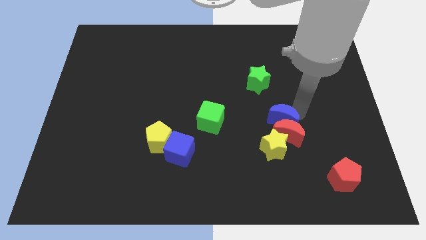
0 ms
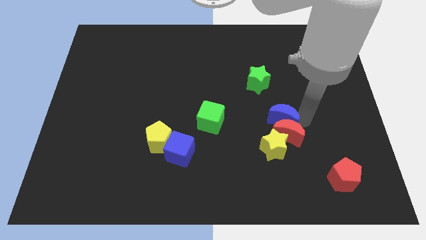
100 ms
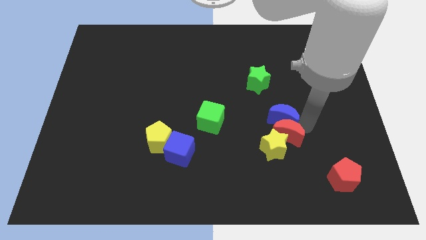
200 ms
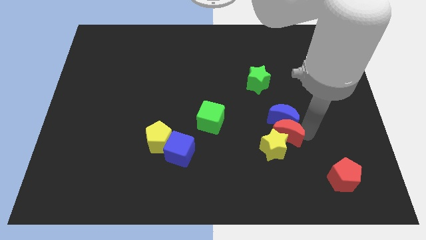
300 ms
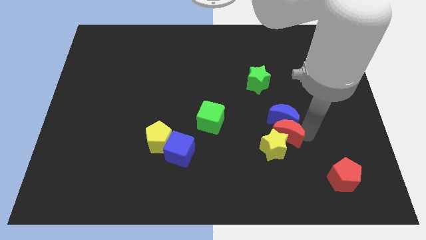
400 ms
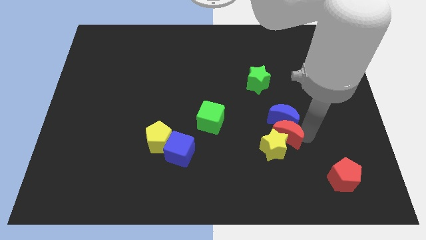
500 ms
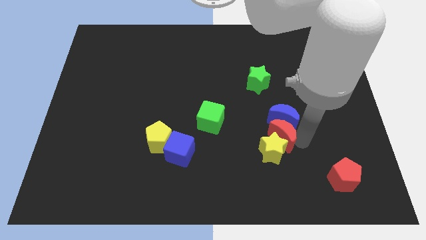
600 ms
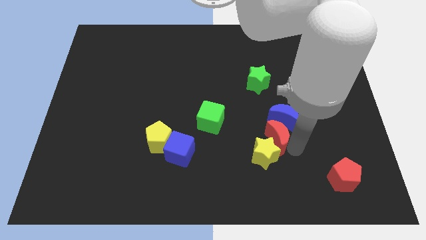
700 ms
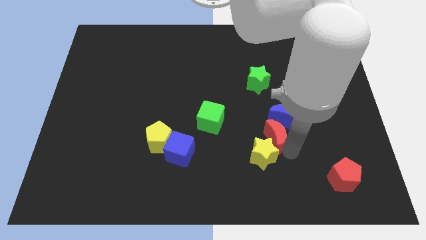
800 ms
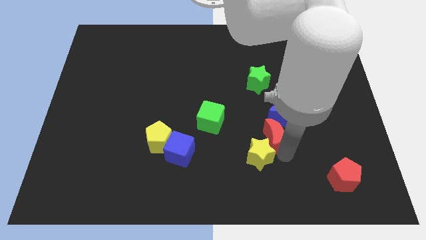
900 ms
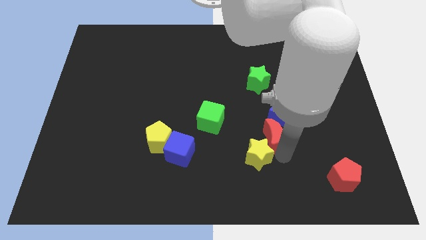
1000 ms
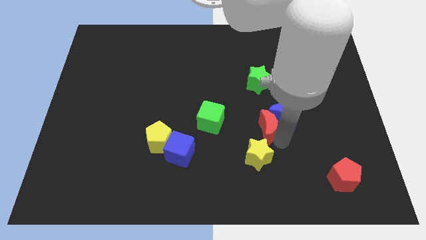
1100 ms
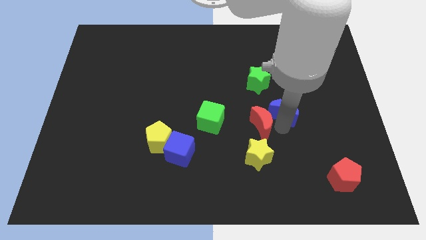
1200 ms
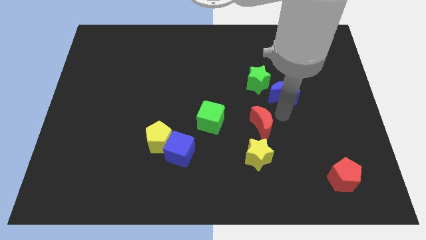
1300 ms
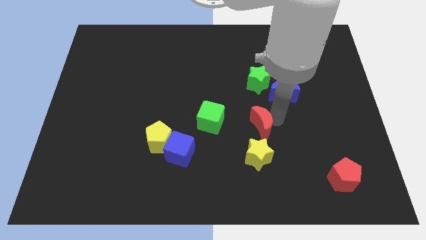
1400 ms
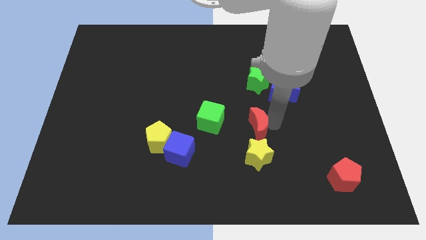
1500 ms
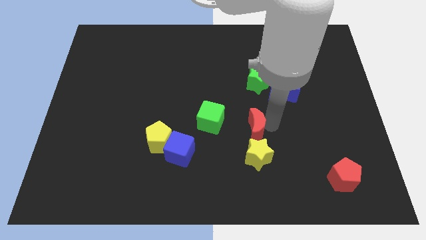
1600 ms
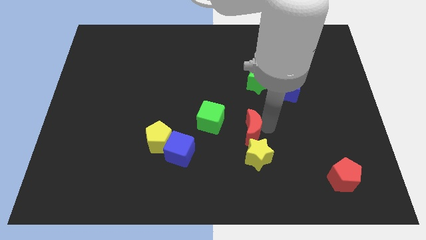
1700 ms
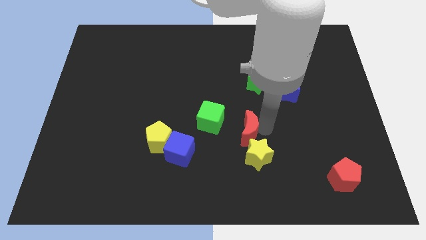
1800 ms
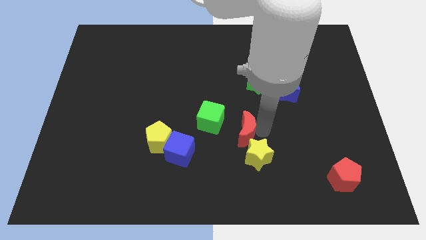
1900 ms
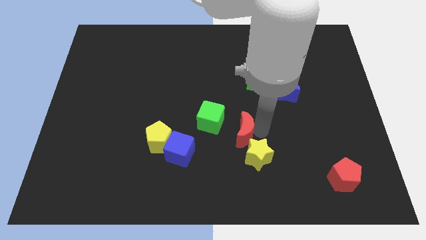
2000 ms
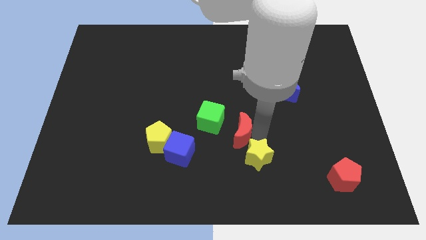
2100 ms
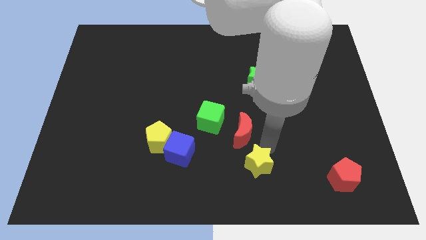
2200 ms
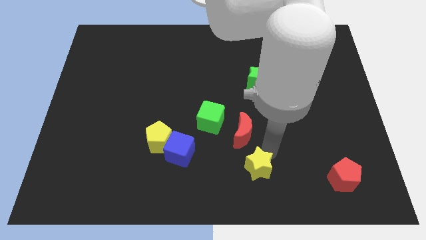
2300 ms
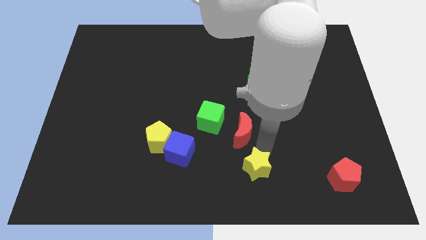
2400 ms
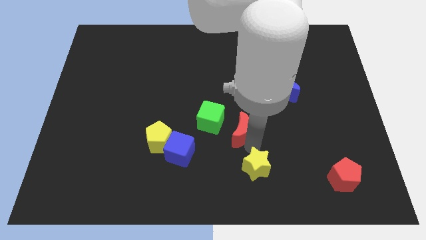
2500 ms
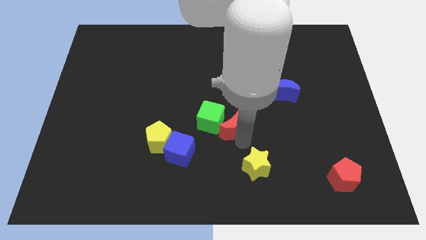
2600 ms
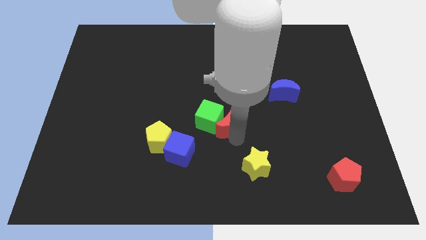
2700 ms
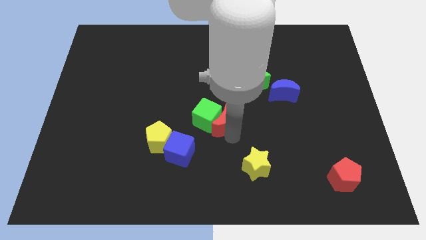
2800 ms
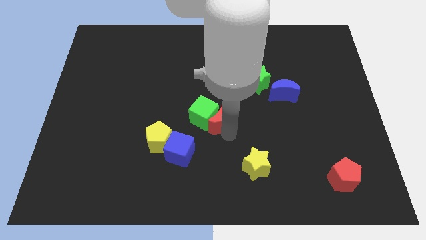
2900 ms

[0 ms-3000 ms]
place red moon to the right of green cube

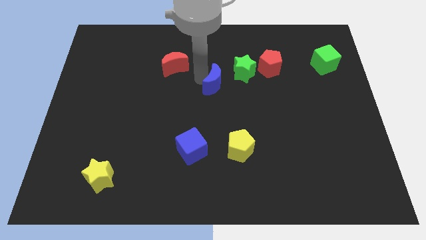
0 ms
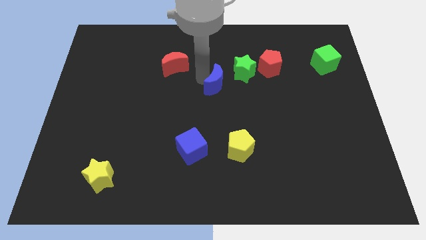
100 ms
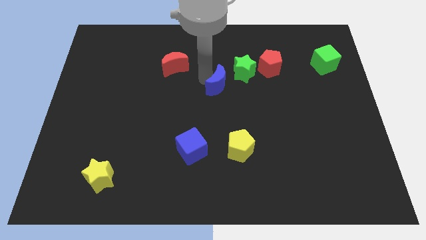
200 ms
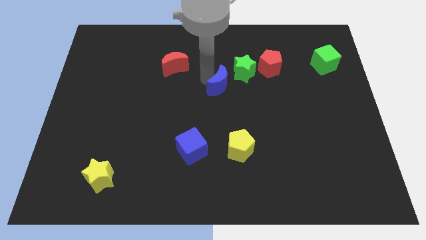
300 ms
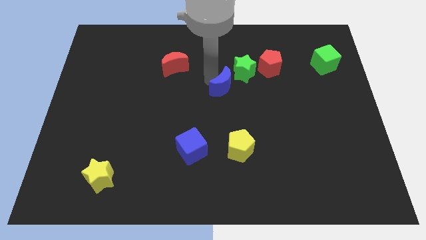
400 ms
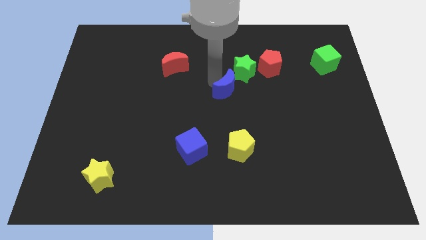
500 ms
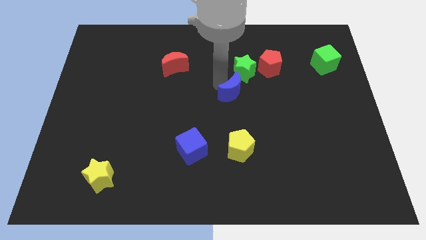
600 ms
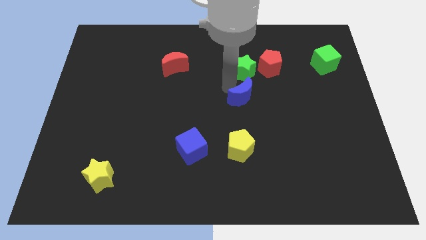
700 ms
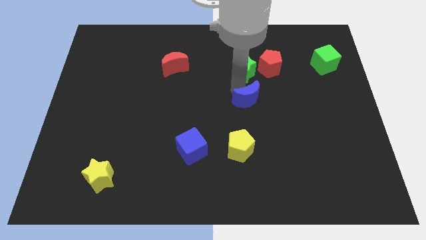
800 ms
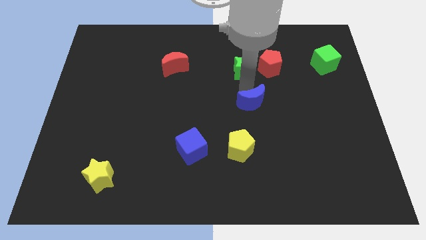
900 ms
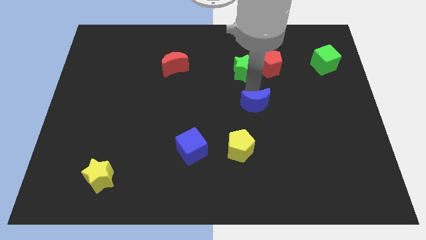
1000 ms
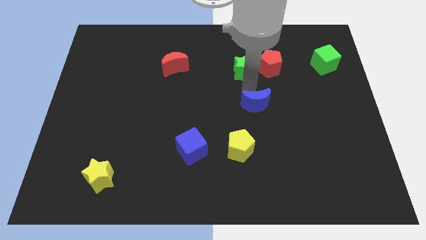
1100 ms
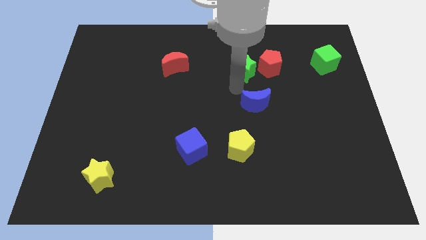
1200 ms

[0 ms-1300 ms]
place the blue moon below the green star

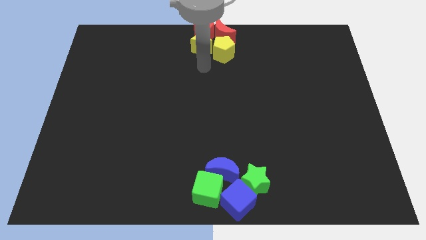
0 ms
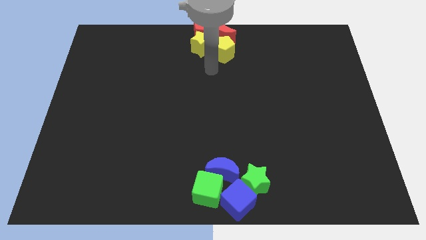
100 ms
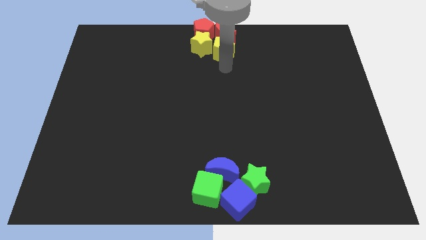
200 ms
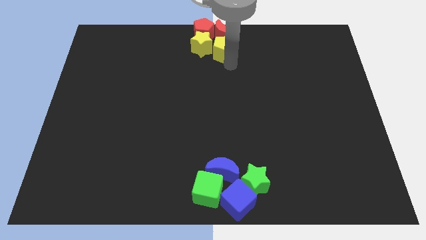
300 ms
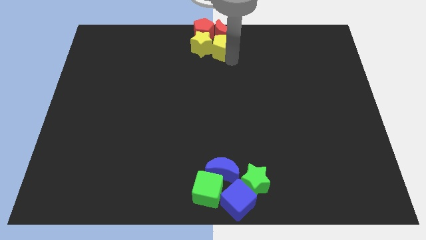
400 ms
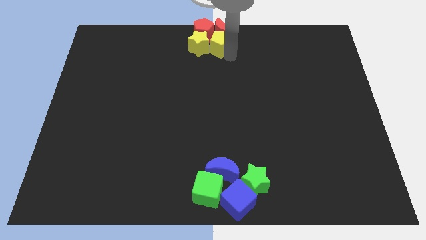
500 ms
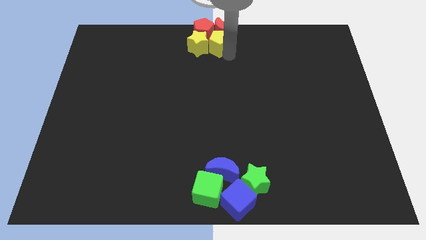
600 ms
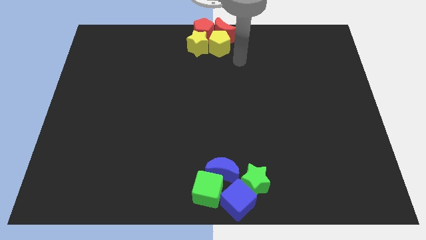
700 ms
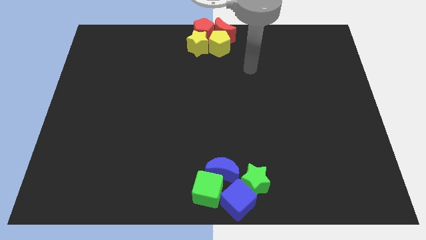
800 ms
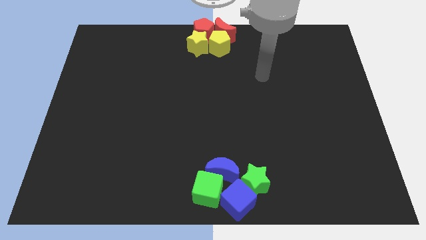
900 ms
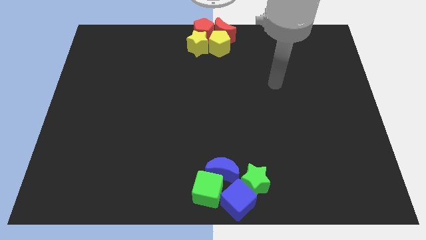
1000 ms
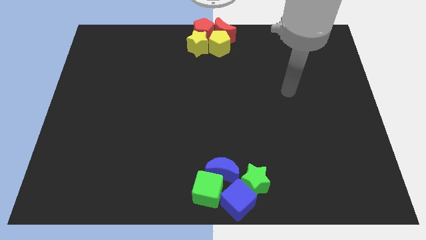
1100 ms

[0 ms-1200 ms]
move the arm diagonally down right

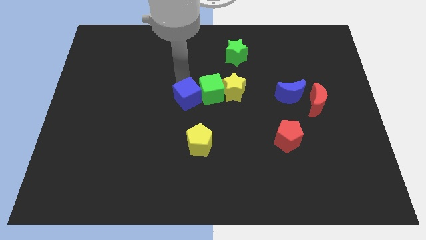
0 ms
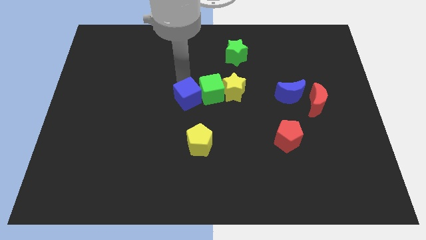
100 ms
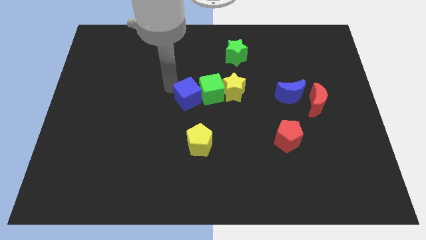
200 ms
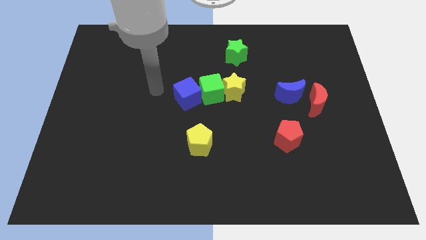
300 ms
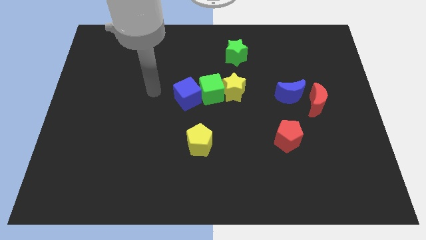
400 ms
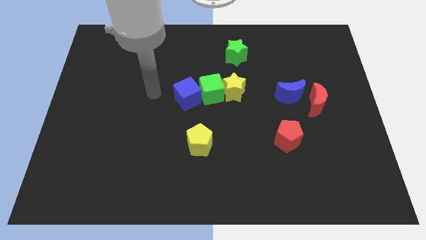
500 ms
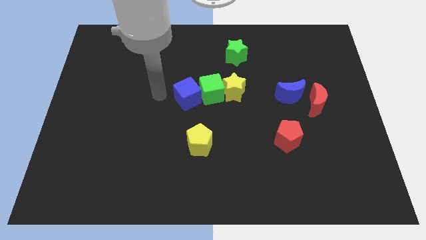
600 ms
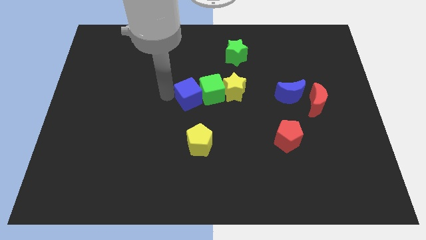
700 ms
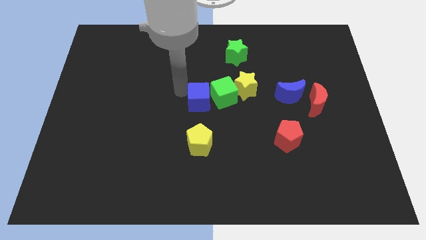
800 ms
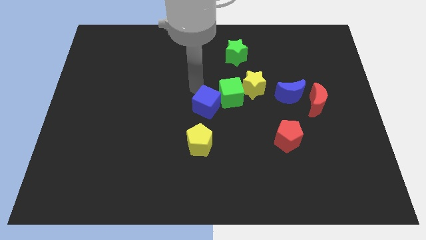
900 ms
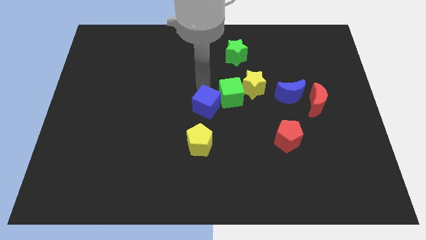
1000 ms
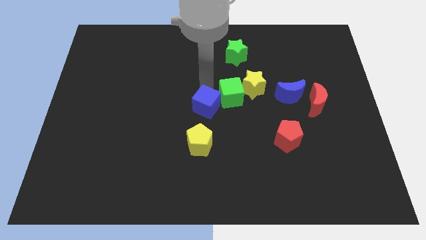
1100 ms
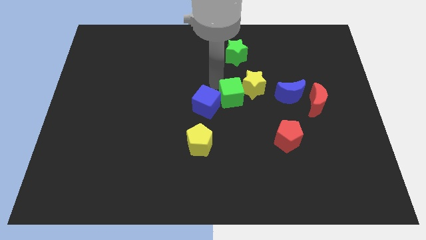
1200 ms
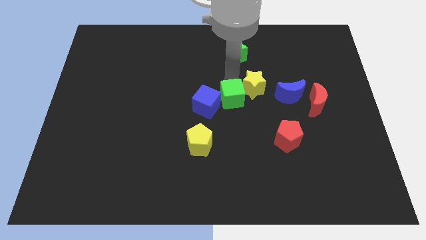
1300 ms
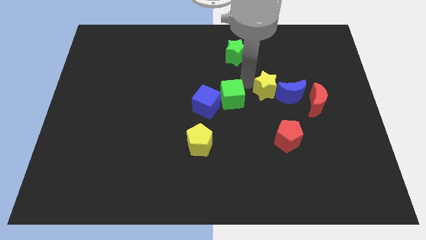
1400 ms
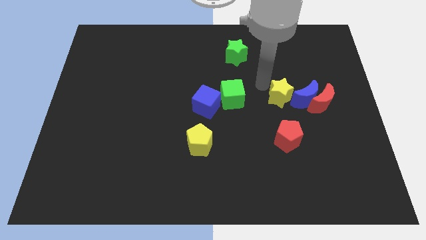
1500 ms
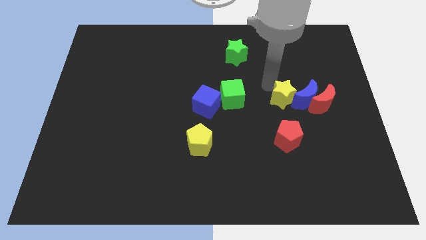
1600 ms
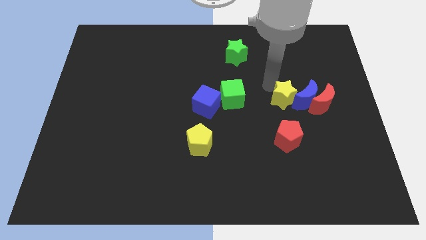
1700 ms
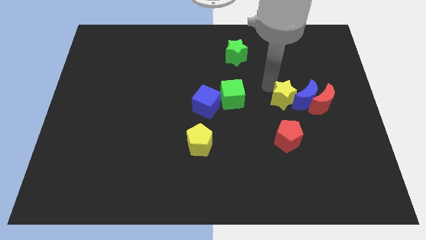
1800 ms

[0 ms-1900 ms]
separate the yellow star from the green cube

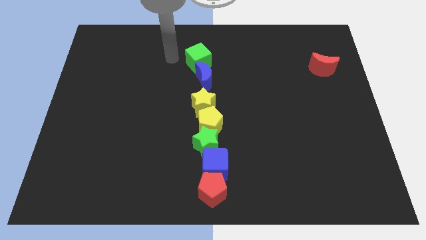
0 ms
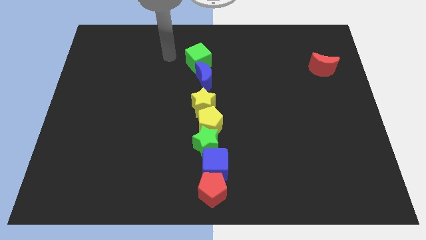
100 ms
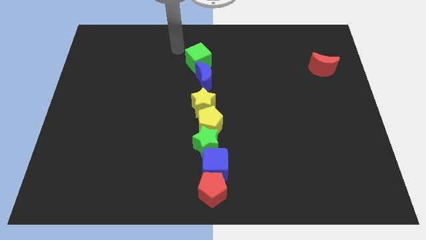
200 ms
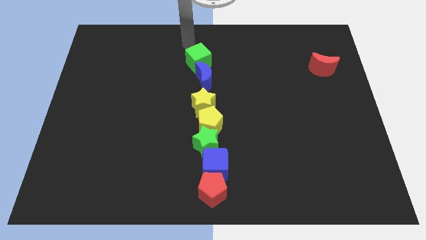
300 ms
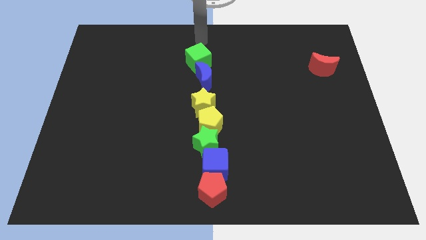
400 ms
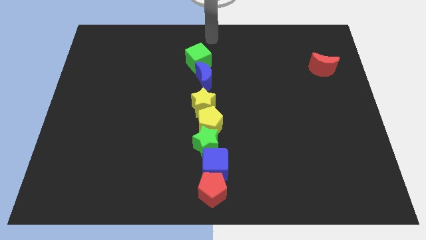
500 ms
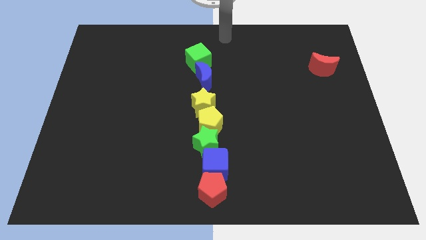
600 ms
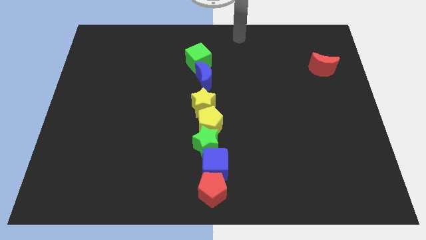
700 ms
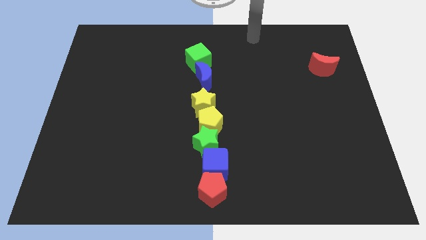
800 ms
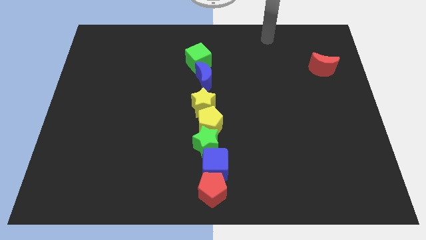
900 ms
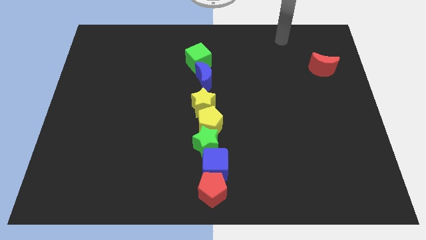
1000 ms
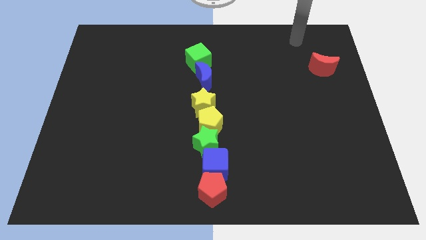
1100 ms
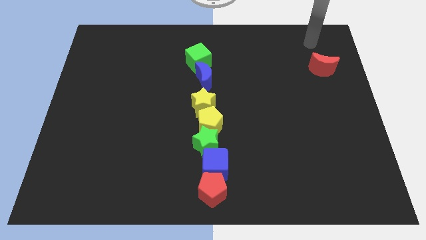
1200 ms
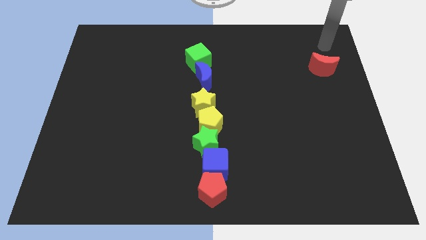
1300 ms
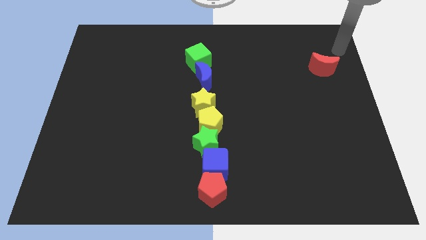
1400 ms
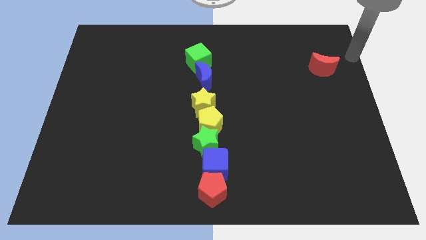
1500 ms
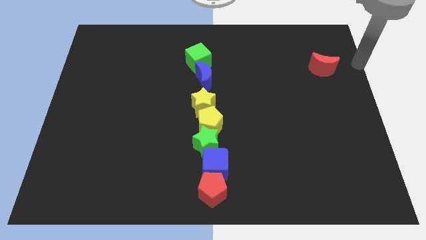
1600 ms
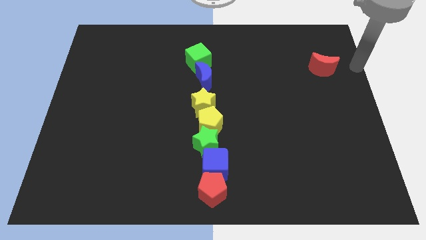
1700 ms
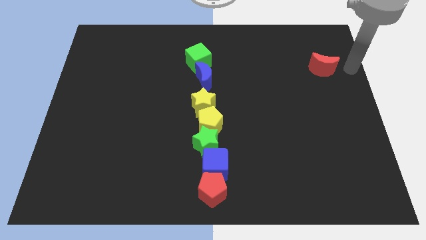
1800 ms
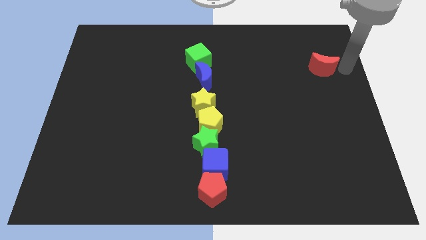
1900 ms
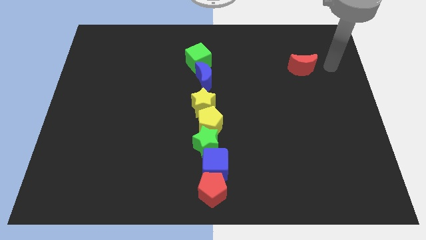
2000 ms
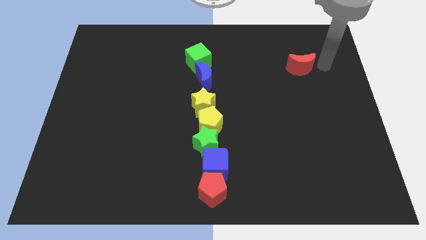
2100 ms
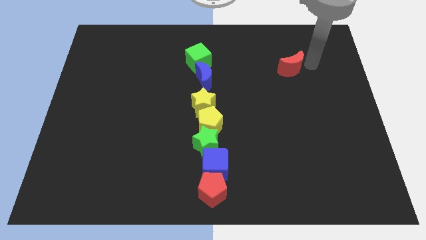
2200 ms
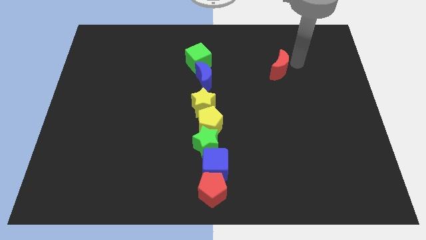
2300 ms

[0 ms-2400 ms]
push the red crescent towards left side
